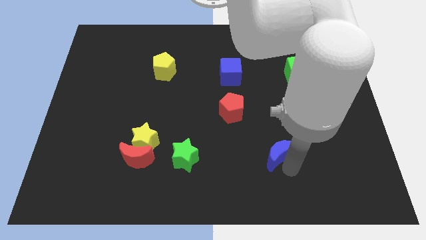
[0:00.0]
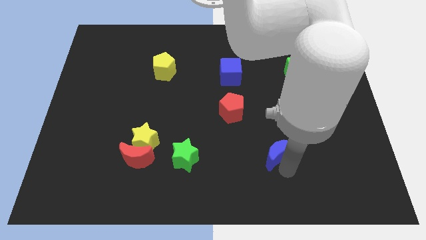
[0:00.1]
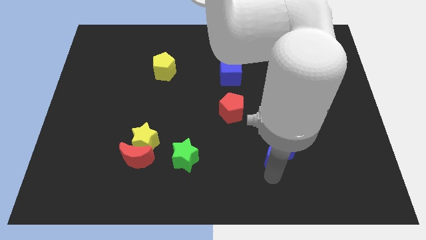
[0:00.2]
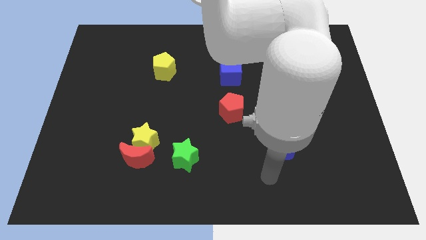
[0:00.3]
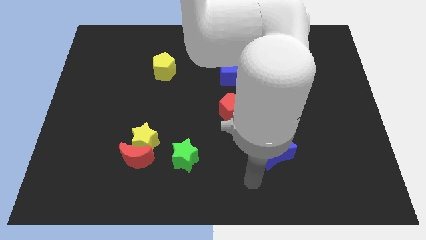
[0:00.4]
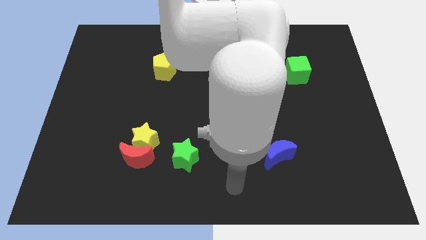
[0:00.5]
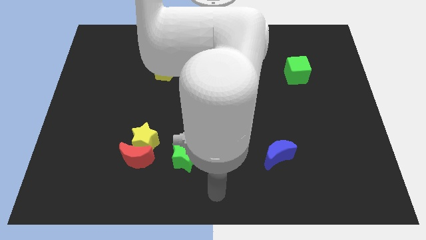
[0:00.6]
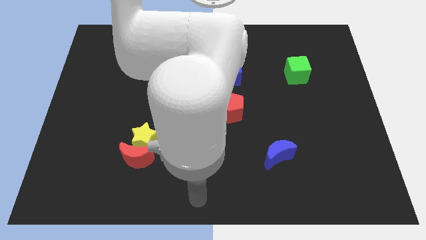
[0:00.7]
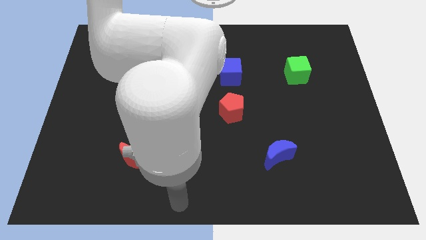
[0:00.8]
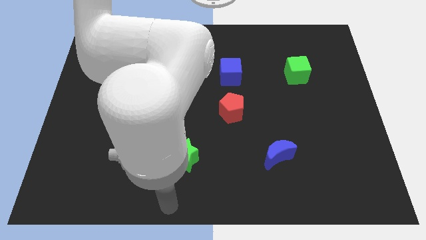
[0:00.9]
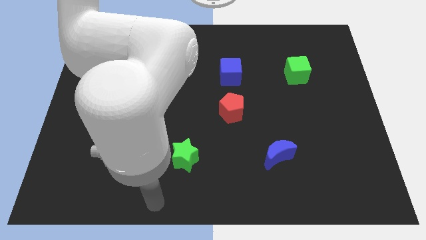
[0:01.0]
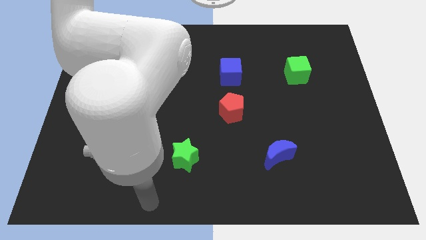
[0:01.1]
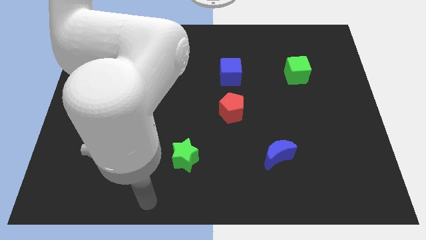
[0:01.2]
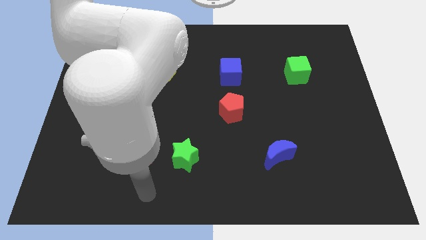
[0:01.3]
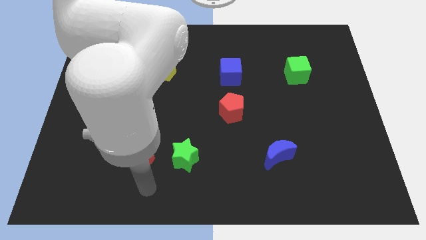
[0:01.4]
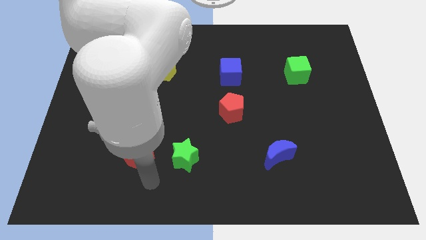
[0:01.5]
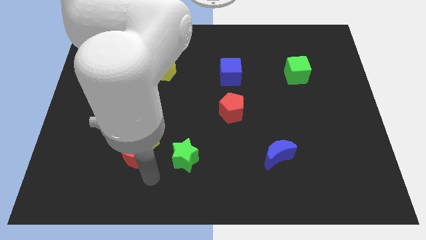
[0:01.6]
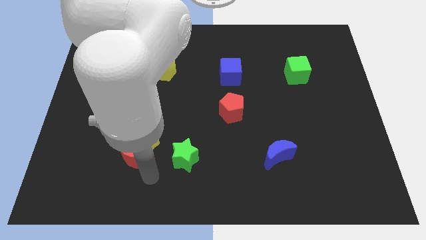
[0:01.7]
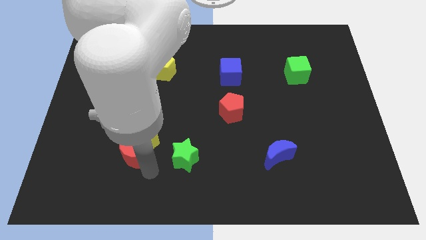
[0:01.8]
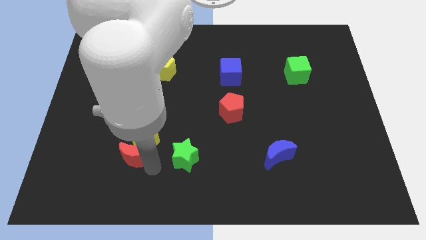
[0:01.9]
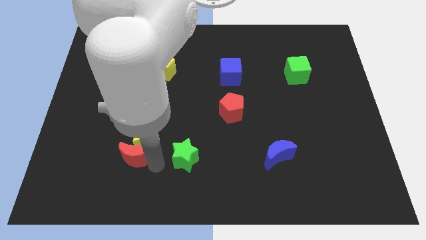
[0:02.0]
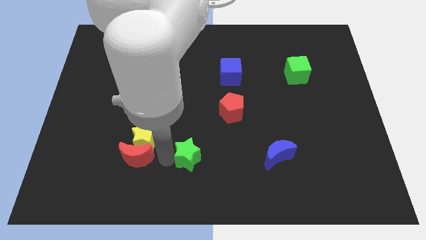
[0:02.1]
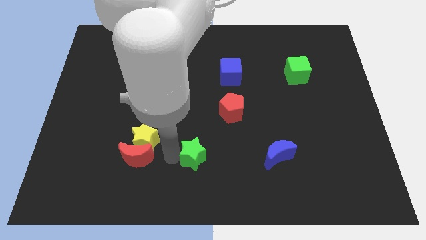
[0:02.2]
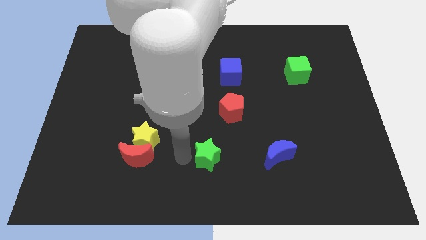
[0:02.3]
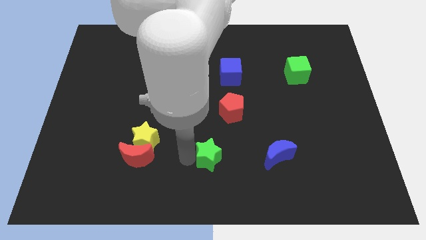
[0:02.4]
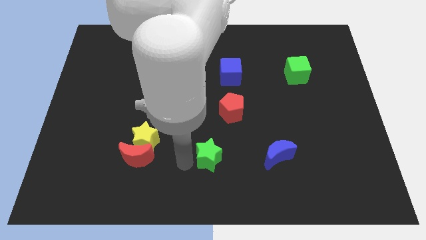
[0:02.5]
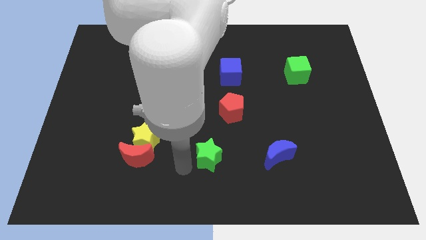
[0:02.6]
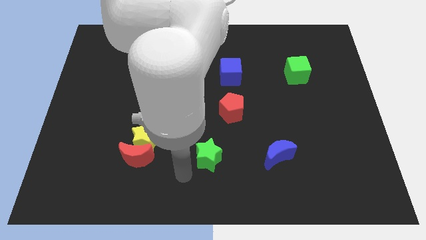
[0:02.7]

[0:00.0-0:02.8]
move the green star left to the blue crescent

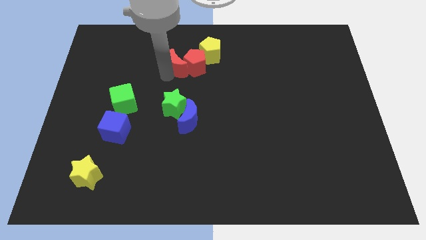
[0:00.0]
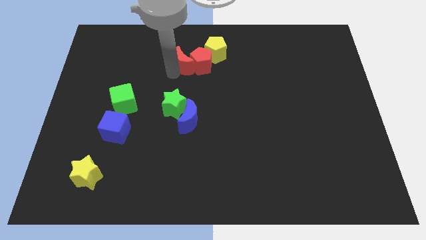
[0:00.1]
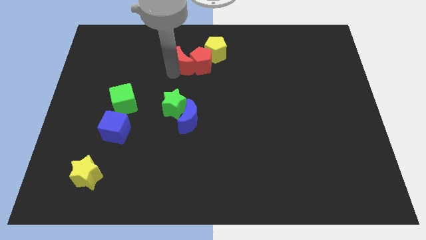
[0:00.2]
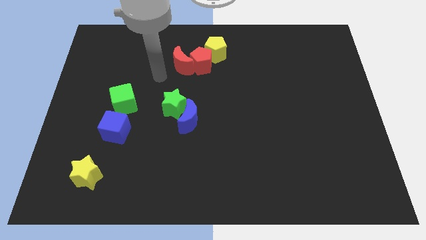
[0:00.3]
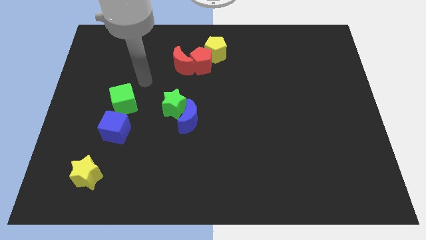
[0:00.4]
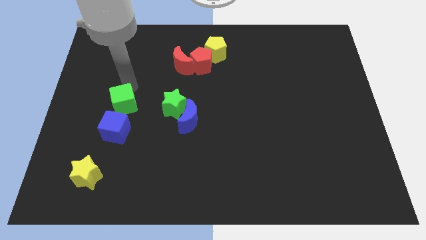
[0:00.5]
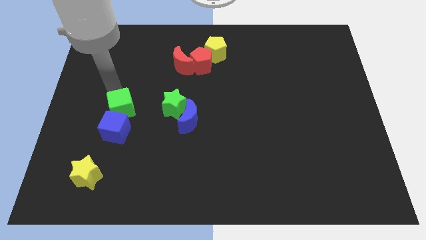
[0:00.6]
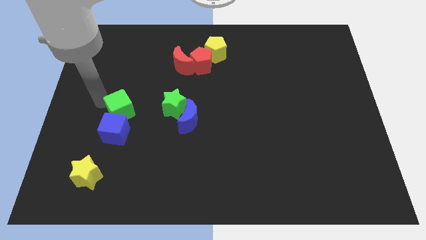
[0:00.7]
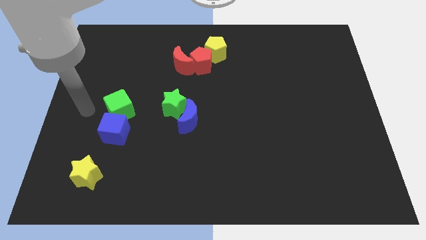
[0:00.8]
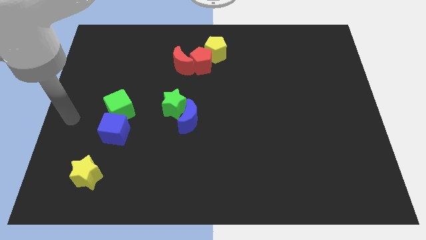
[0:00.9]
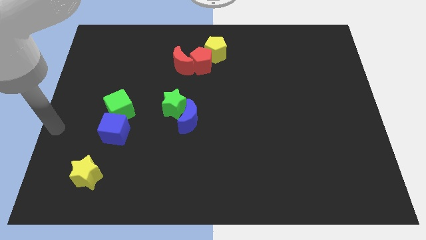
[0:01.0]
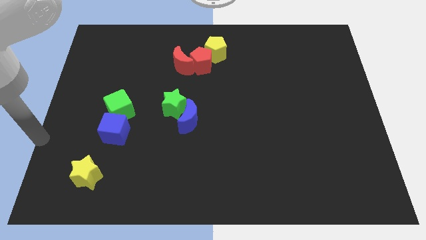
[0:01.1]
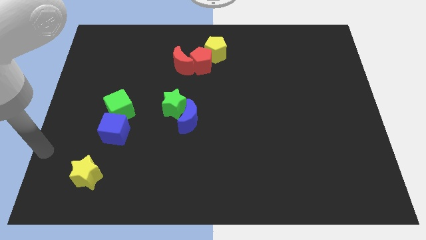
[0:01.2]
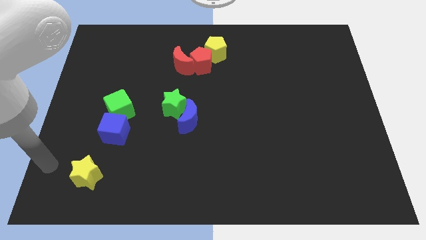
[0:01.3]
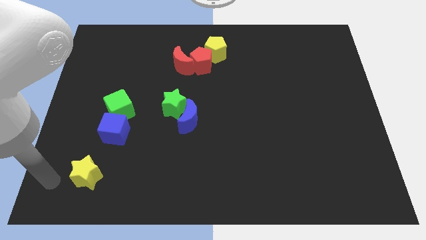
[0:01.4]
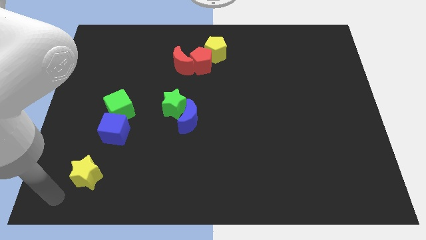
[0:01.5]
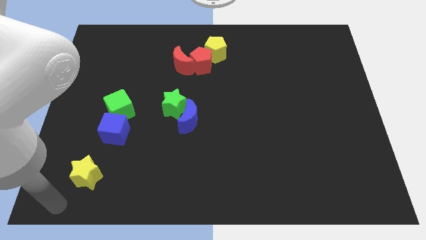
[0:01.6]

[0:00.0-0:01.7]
slightly touch the green cube and move away

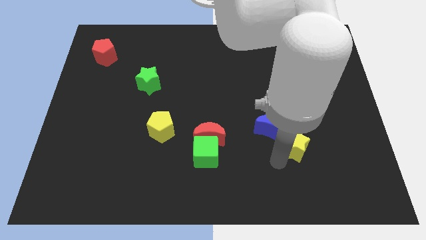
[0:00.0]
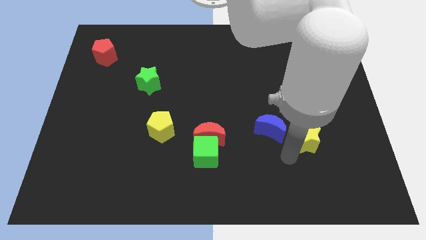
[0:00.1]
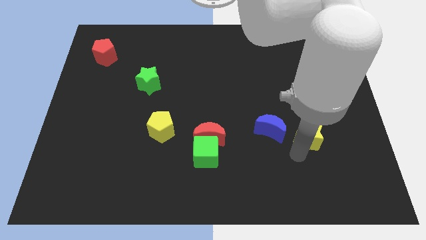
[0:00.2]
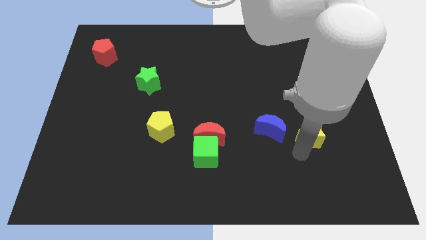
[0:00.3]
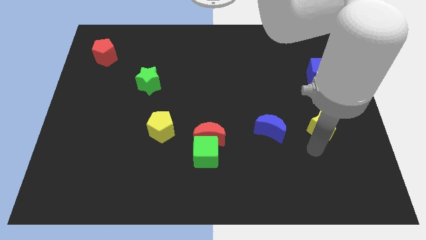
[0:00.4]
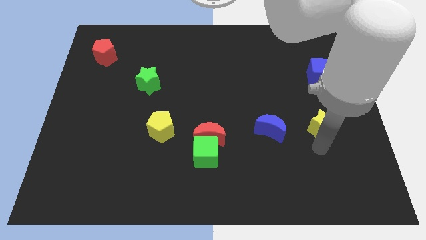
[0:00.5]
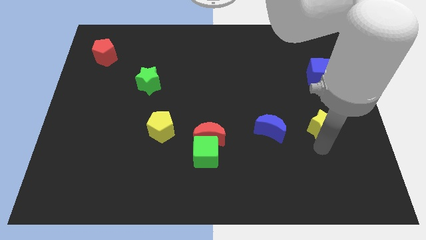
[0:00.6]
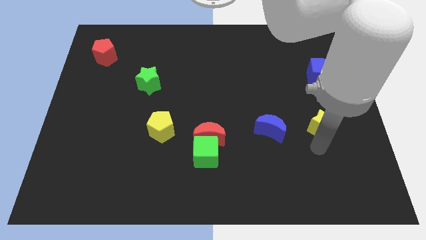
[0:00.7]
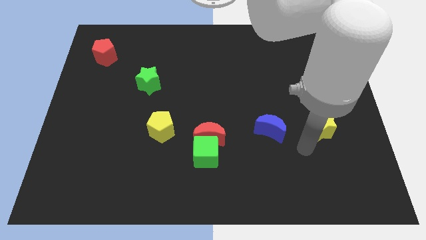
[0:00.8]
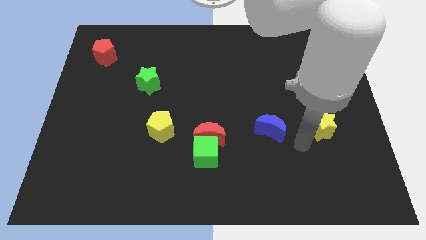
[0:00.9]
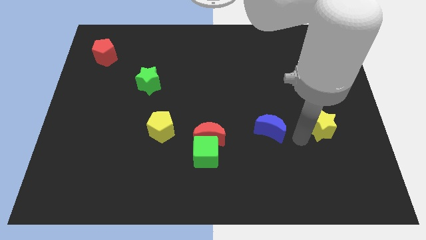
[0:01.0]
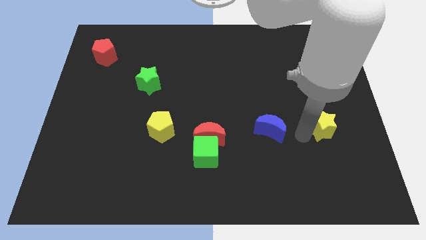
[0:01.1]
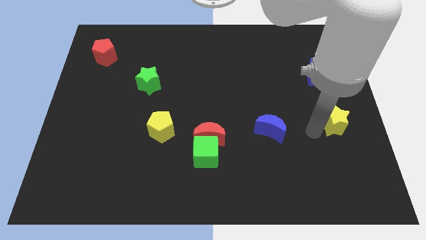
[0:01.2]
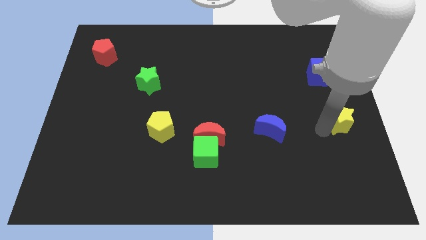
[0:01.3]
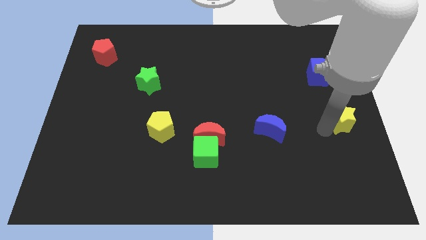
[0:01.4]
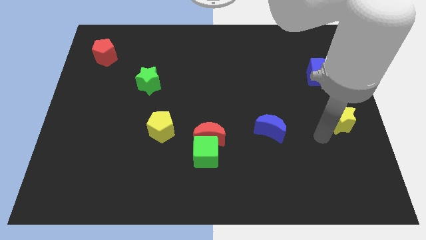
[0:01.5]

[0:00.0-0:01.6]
move the yellow star to the center right

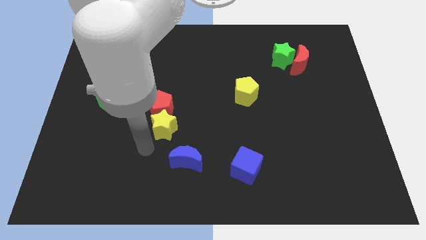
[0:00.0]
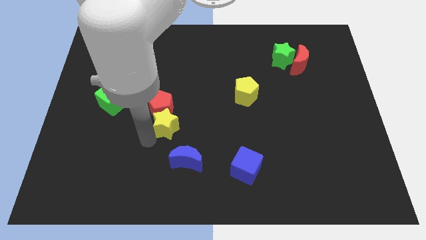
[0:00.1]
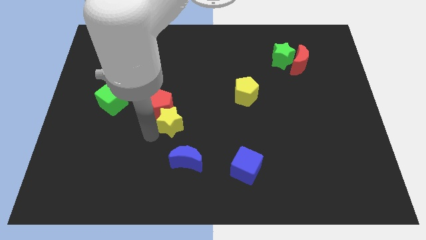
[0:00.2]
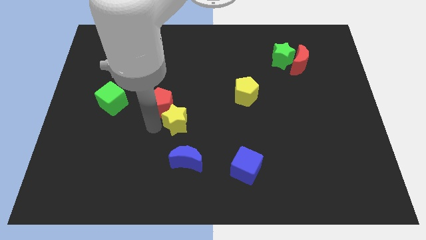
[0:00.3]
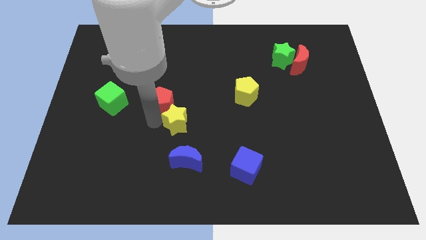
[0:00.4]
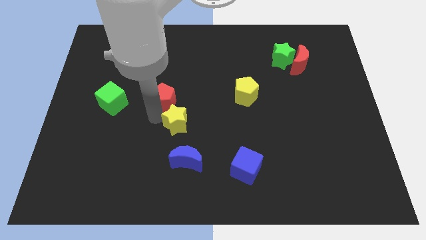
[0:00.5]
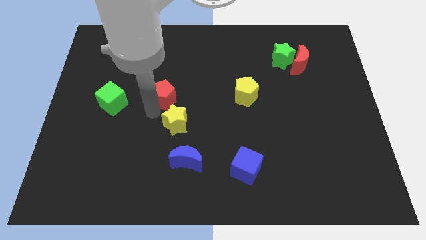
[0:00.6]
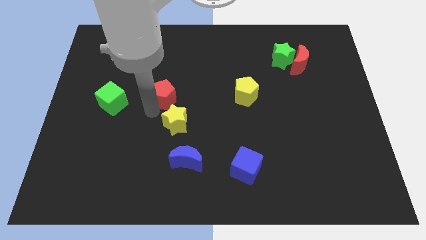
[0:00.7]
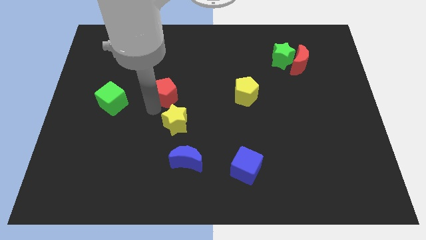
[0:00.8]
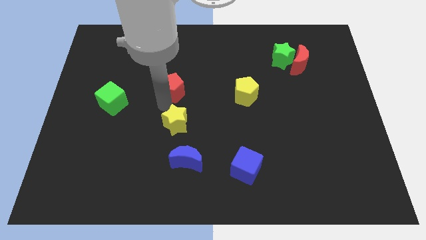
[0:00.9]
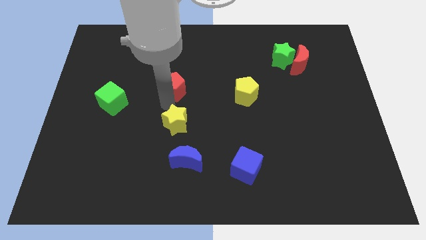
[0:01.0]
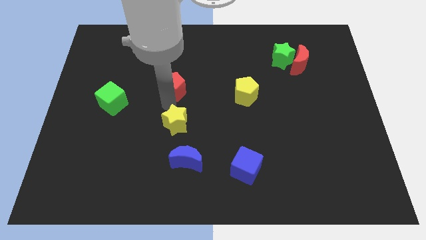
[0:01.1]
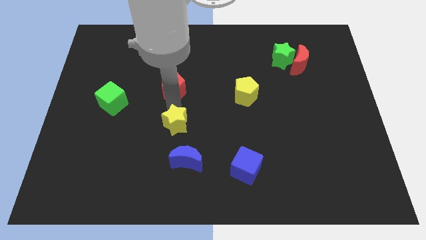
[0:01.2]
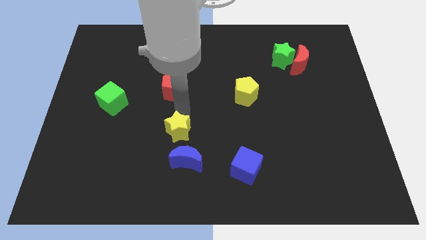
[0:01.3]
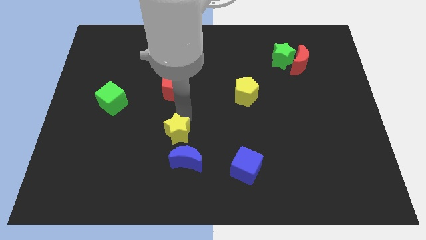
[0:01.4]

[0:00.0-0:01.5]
separate red pentagon from yellow star

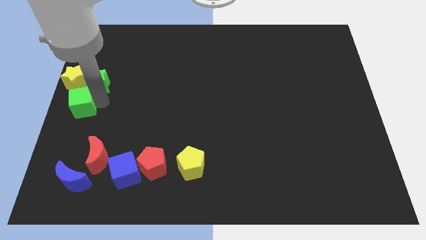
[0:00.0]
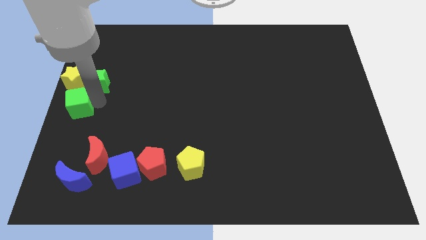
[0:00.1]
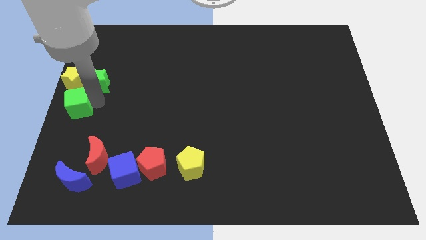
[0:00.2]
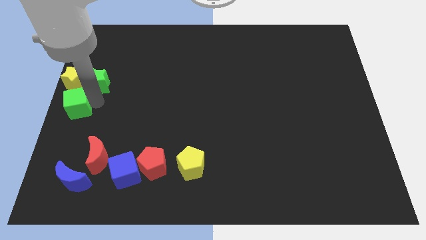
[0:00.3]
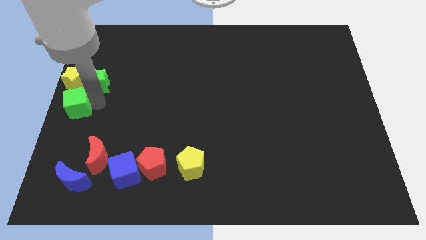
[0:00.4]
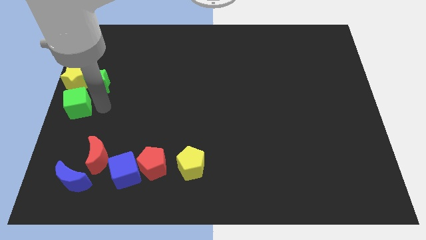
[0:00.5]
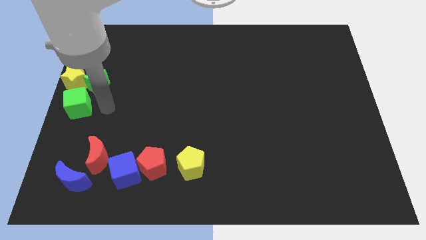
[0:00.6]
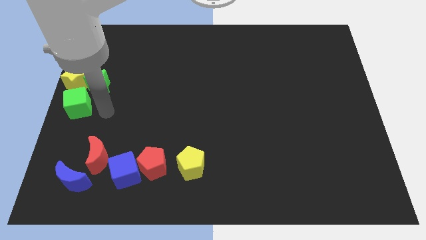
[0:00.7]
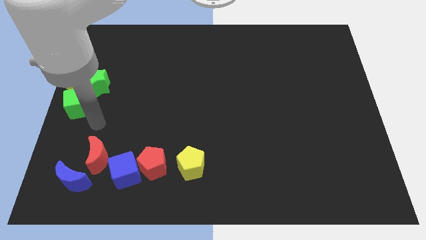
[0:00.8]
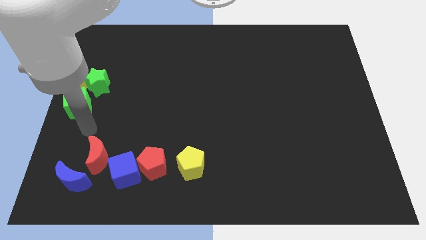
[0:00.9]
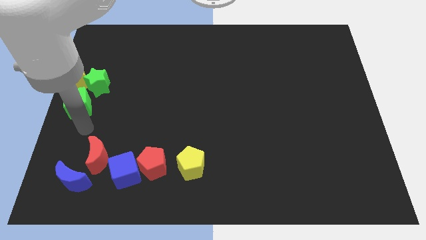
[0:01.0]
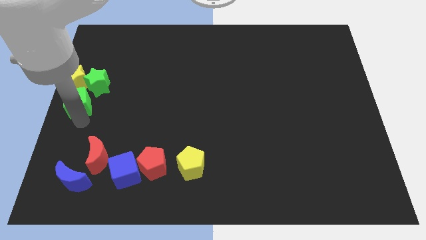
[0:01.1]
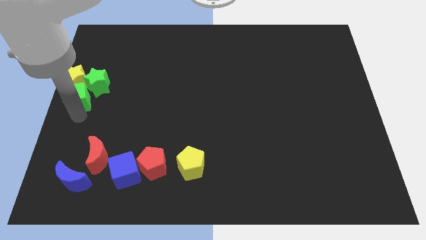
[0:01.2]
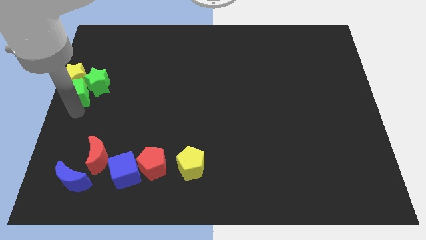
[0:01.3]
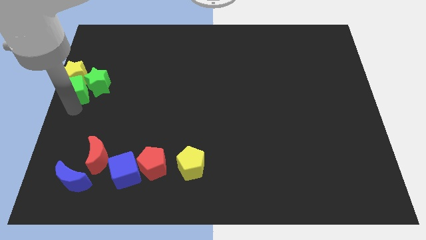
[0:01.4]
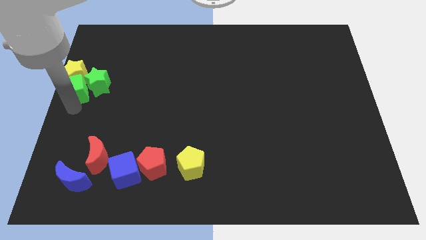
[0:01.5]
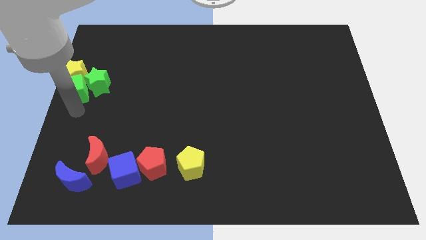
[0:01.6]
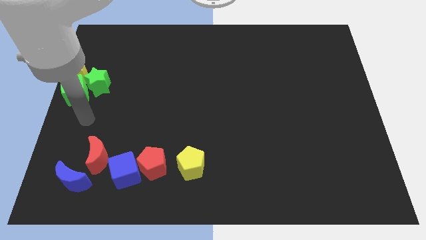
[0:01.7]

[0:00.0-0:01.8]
push the green cube into the yellow star
